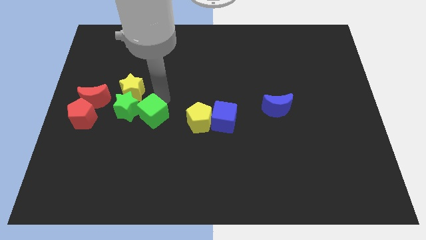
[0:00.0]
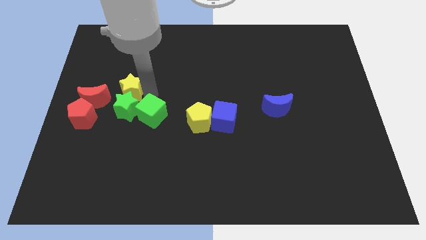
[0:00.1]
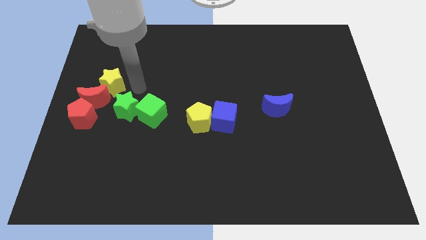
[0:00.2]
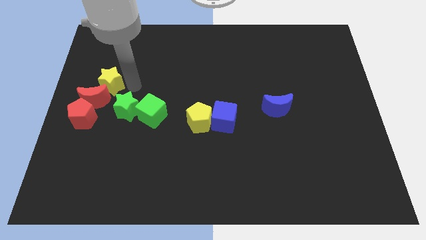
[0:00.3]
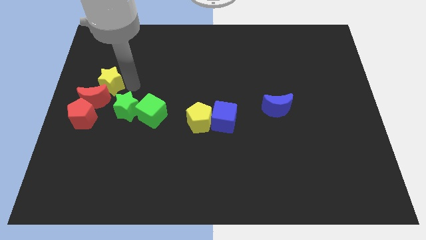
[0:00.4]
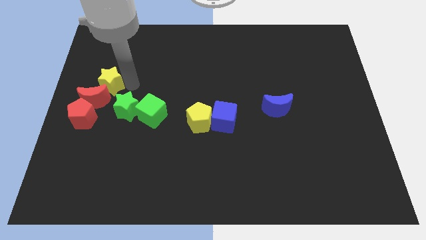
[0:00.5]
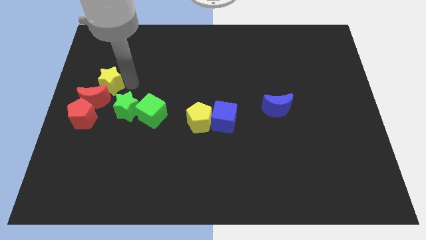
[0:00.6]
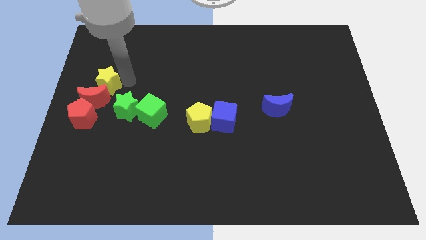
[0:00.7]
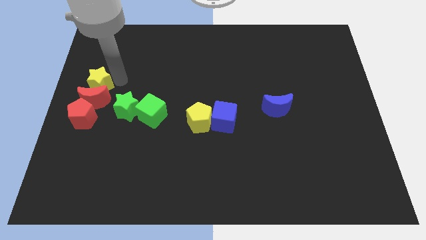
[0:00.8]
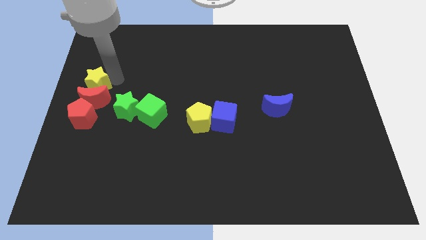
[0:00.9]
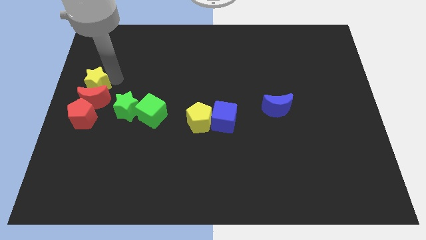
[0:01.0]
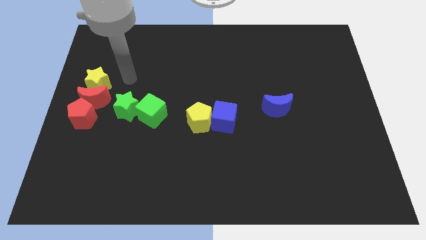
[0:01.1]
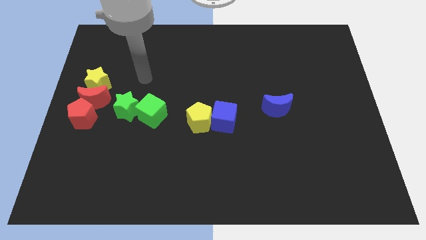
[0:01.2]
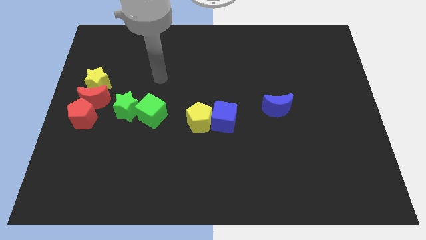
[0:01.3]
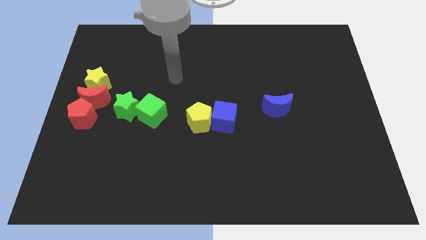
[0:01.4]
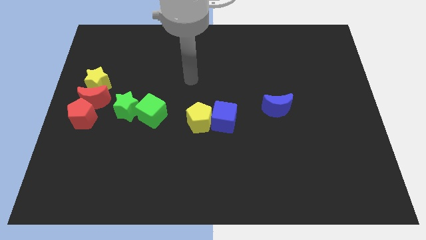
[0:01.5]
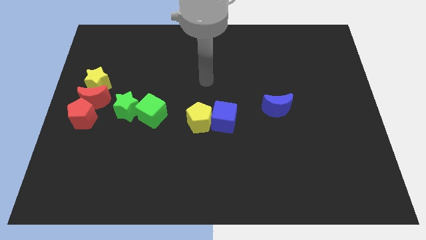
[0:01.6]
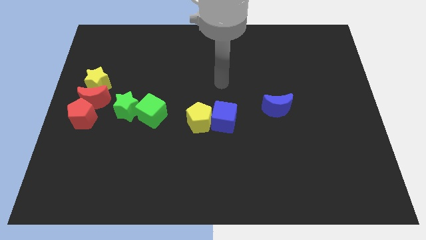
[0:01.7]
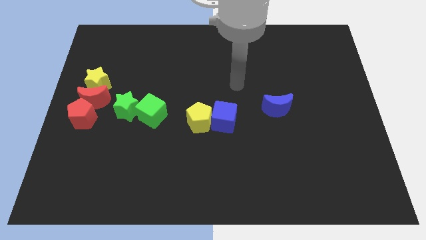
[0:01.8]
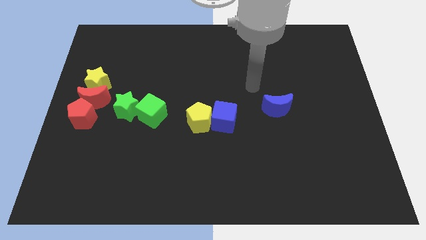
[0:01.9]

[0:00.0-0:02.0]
move the yellow star to the top of the red crescent

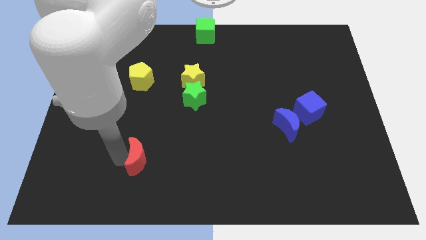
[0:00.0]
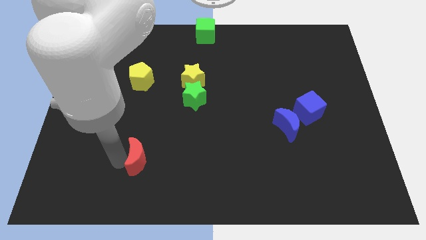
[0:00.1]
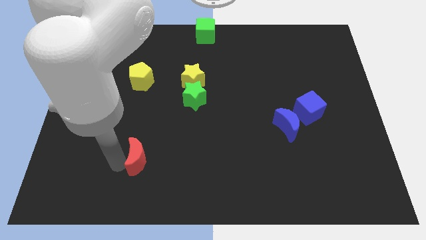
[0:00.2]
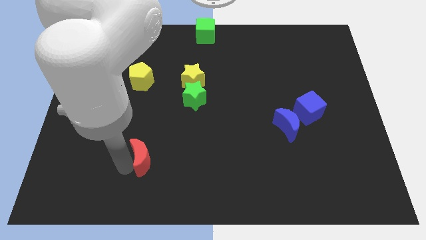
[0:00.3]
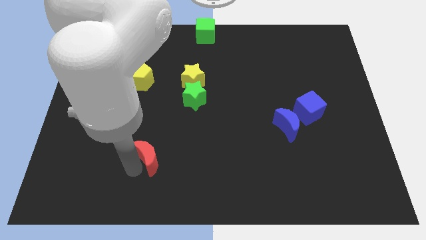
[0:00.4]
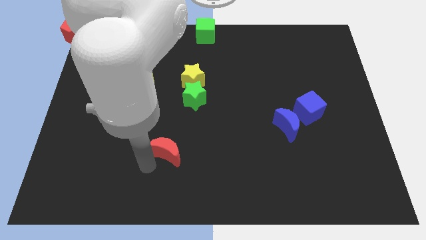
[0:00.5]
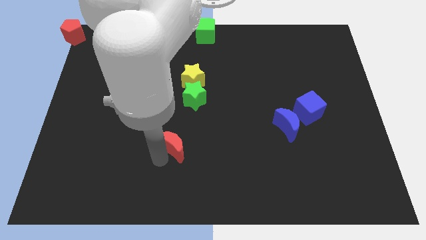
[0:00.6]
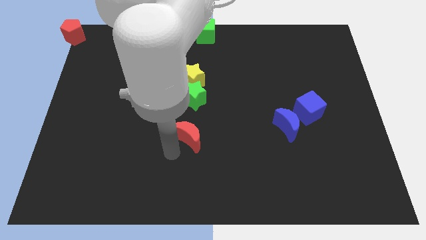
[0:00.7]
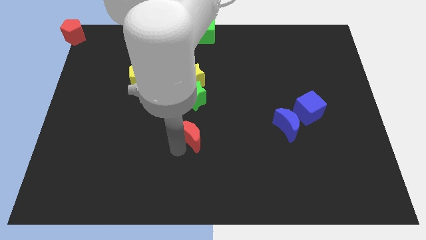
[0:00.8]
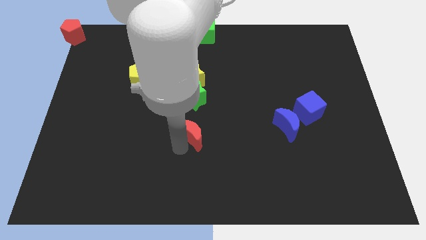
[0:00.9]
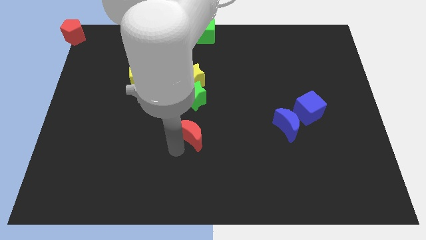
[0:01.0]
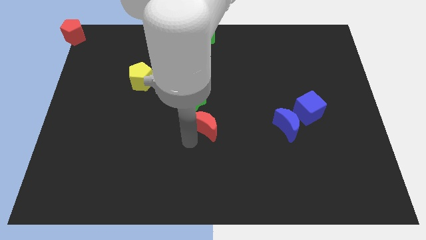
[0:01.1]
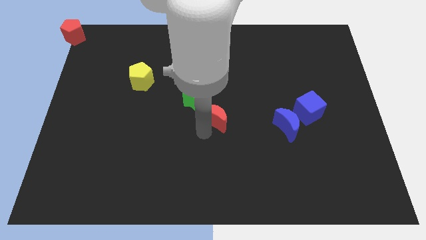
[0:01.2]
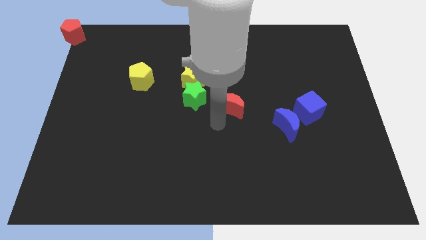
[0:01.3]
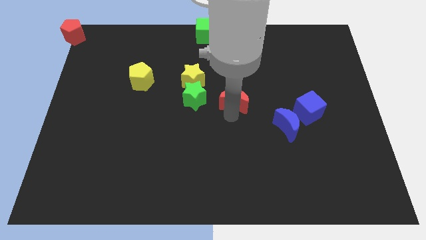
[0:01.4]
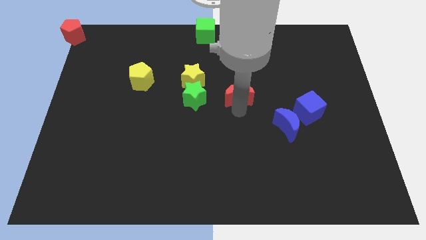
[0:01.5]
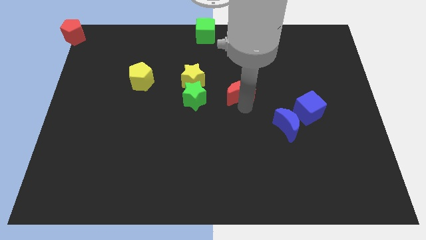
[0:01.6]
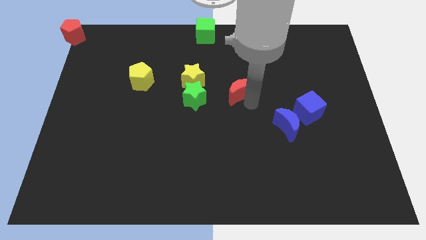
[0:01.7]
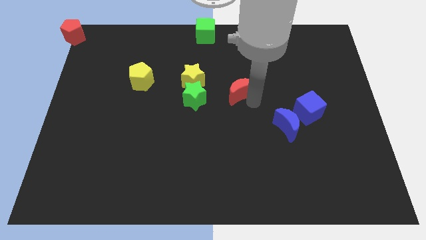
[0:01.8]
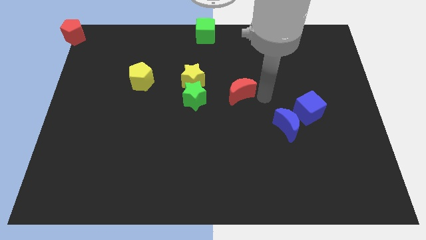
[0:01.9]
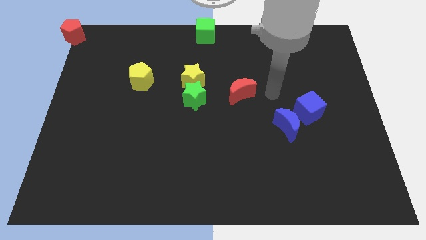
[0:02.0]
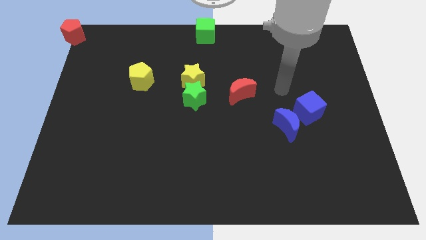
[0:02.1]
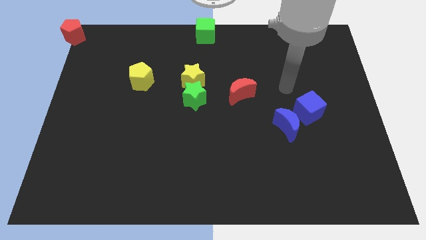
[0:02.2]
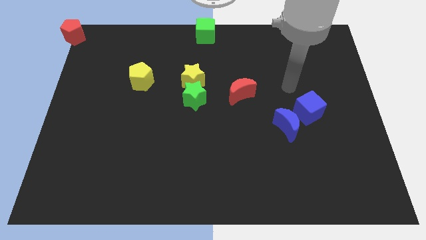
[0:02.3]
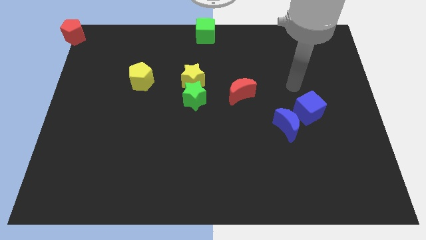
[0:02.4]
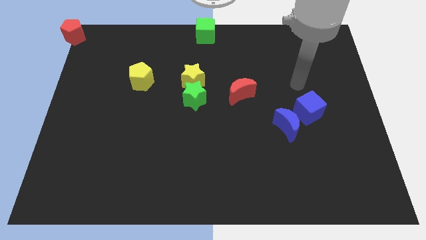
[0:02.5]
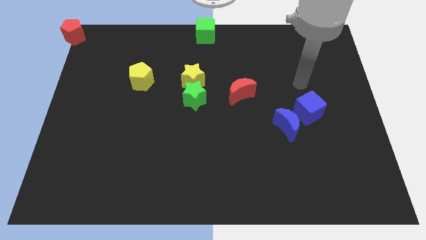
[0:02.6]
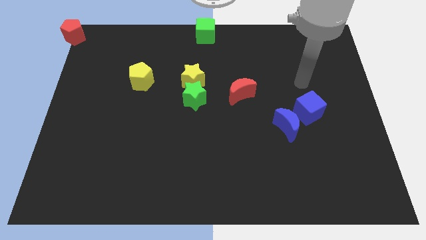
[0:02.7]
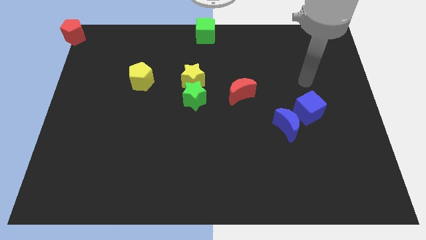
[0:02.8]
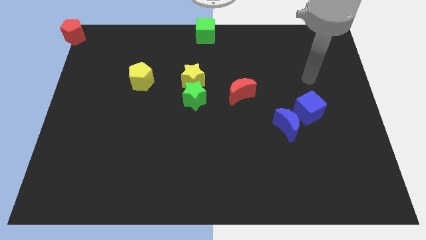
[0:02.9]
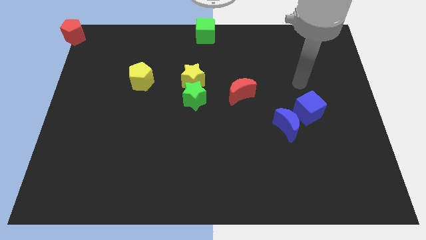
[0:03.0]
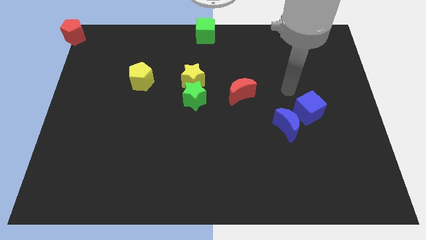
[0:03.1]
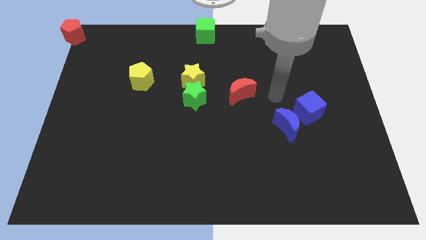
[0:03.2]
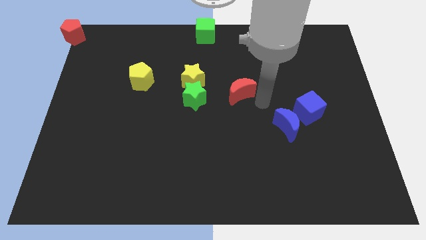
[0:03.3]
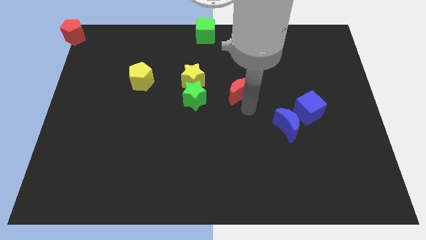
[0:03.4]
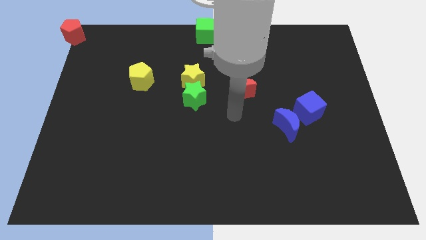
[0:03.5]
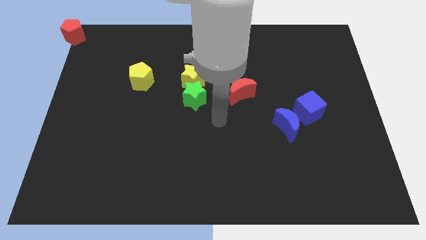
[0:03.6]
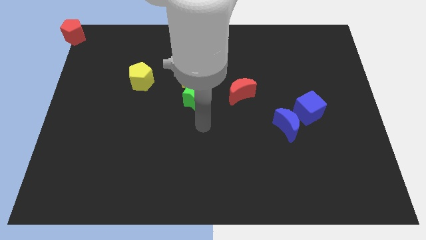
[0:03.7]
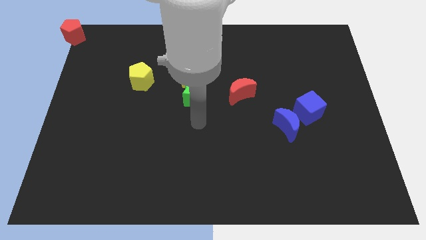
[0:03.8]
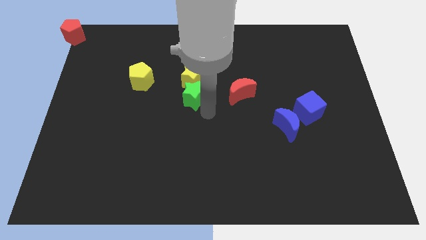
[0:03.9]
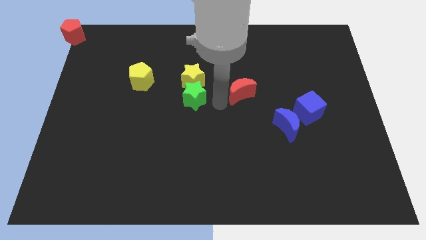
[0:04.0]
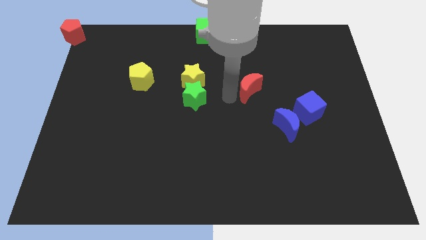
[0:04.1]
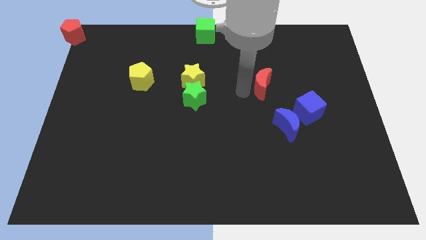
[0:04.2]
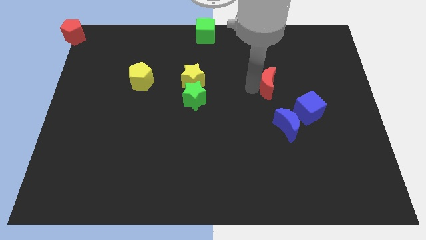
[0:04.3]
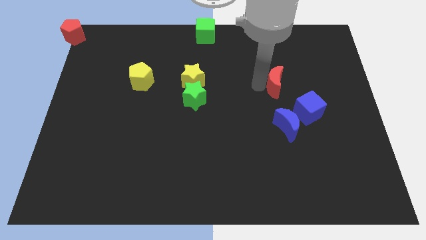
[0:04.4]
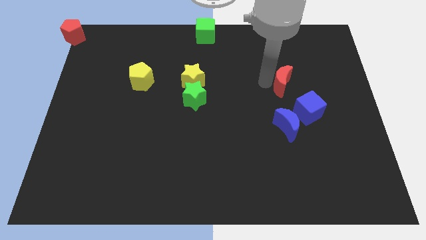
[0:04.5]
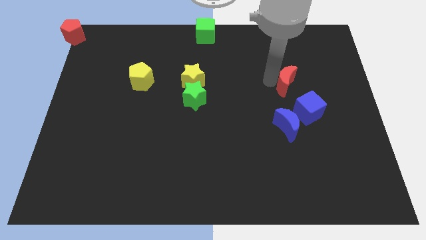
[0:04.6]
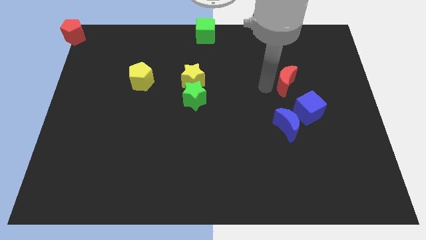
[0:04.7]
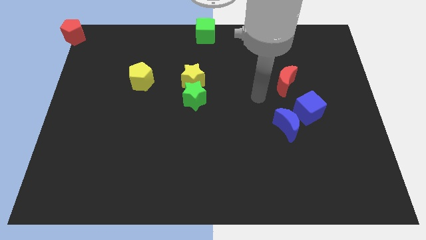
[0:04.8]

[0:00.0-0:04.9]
push the red crescent above the blue blocks

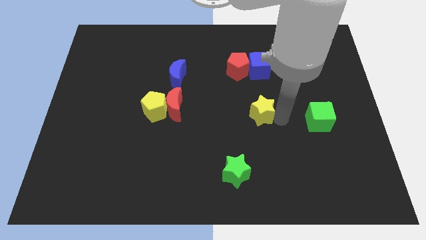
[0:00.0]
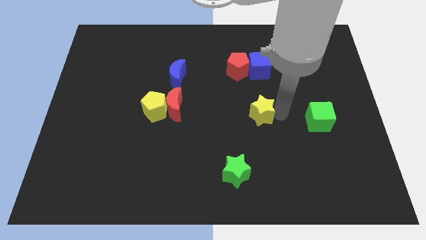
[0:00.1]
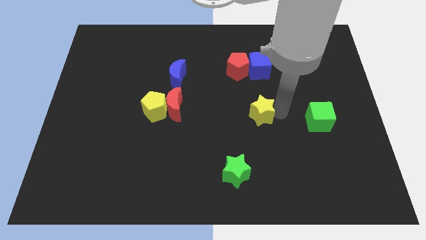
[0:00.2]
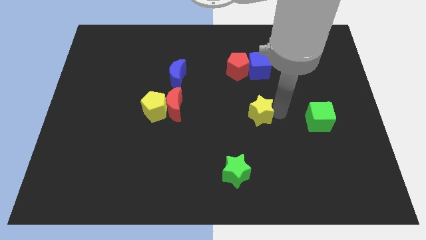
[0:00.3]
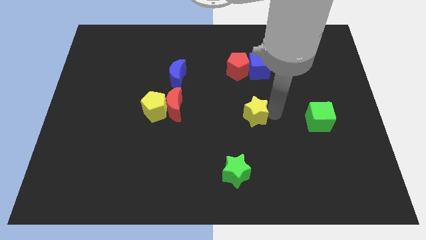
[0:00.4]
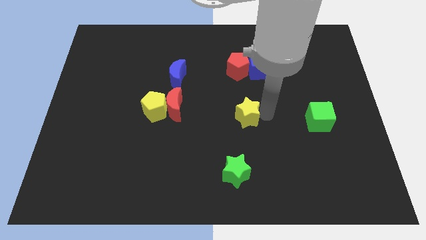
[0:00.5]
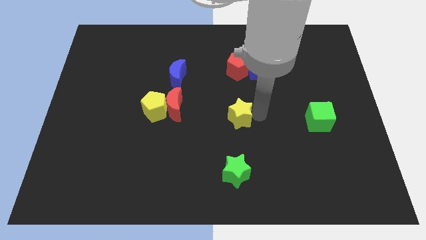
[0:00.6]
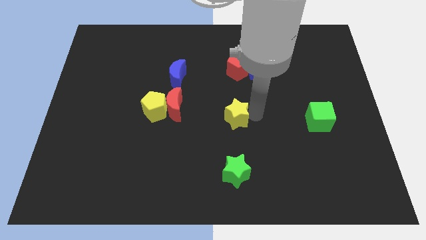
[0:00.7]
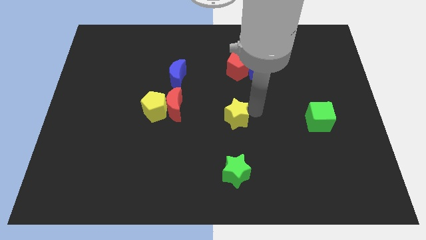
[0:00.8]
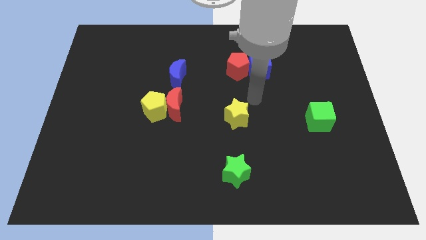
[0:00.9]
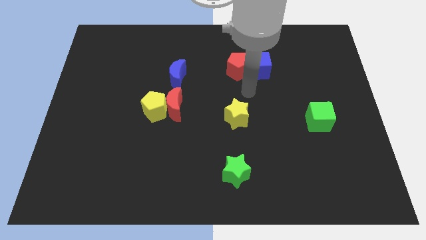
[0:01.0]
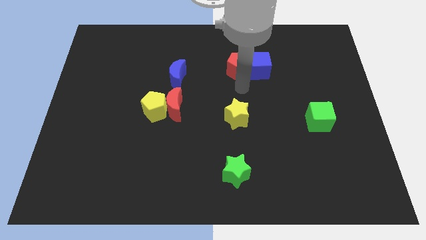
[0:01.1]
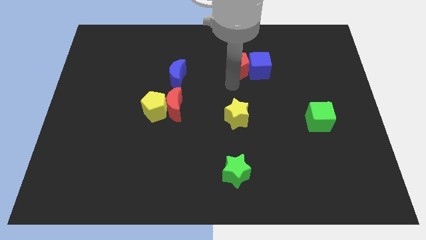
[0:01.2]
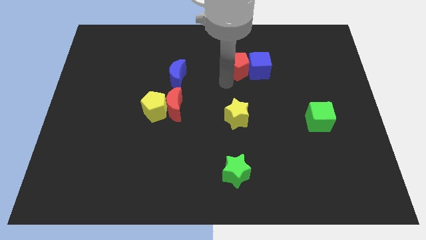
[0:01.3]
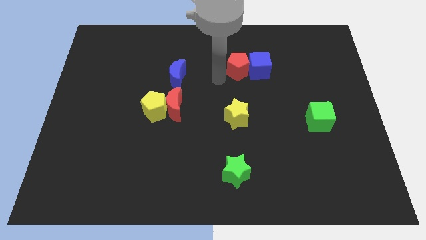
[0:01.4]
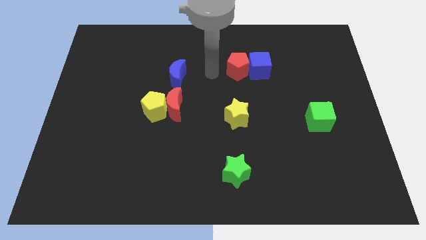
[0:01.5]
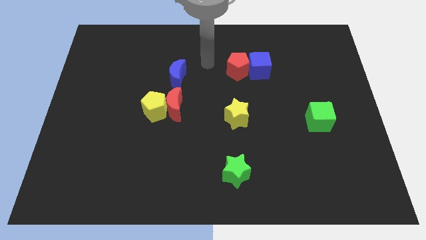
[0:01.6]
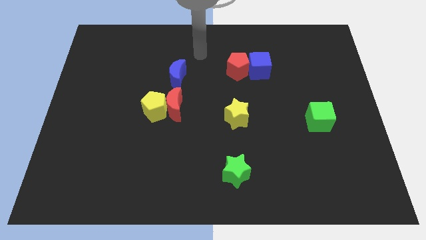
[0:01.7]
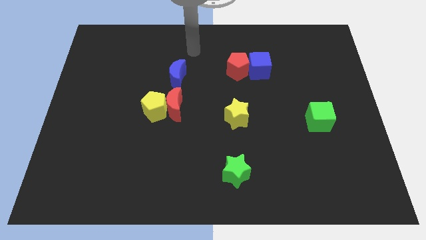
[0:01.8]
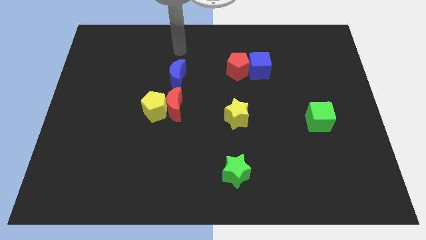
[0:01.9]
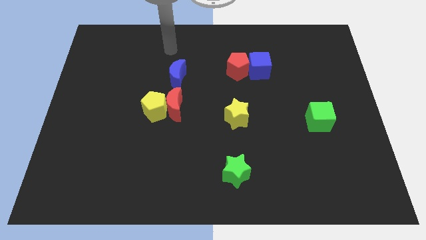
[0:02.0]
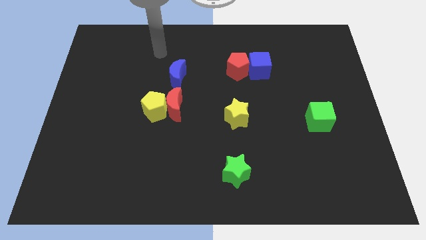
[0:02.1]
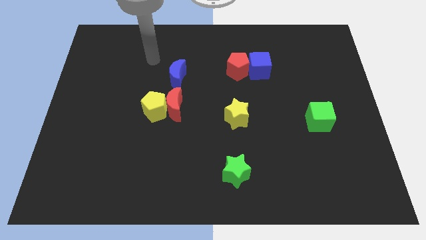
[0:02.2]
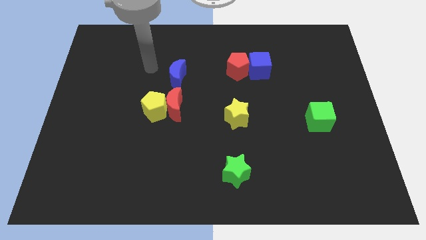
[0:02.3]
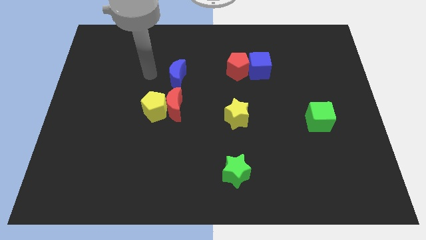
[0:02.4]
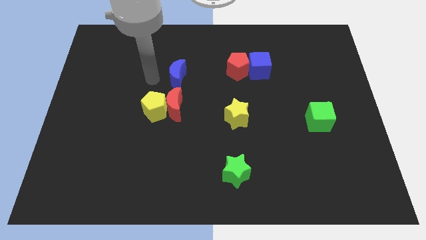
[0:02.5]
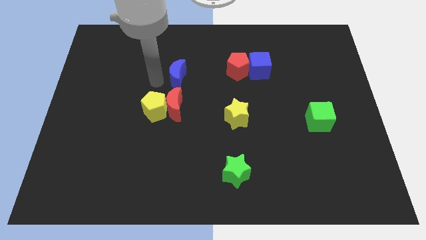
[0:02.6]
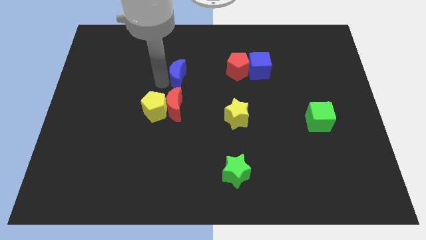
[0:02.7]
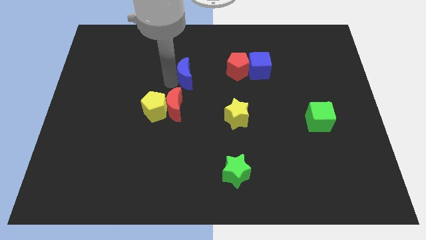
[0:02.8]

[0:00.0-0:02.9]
place your arm left to blue moon
